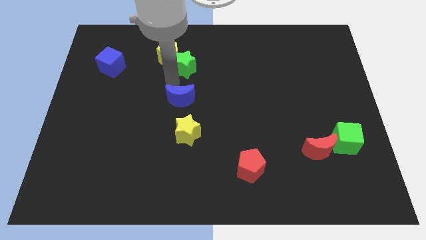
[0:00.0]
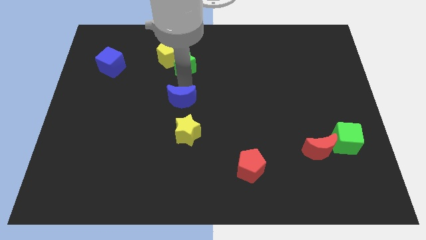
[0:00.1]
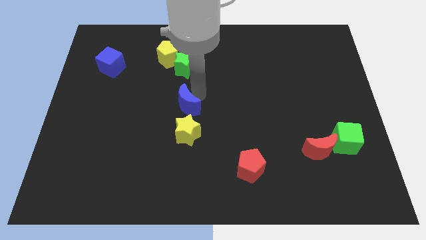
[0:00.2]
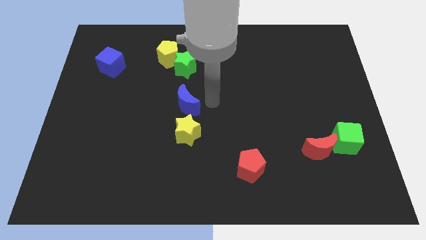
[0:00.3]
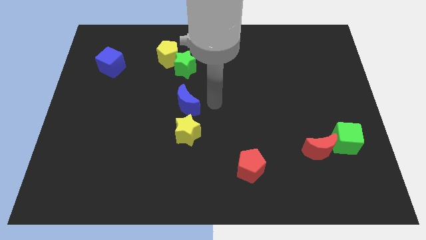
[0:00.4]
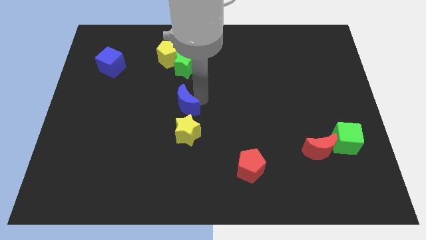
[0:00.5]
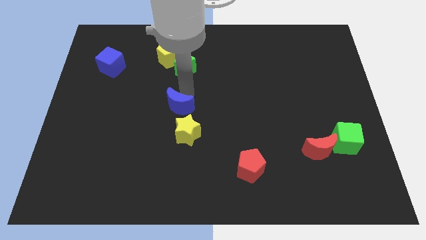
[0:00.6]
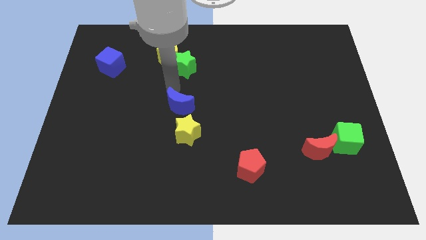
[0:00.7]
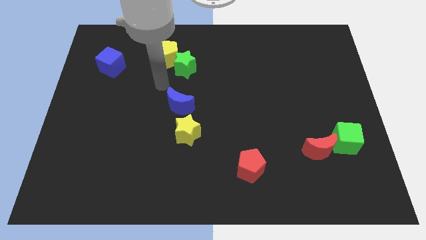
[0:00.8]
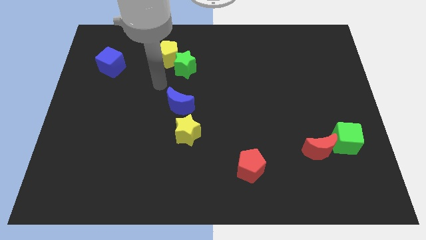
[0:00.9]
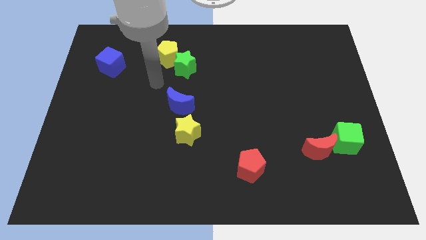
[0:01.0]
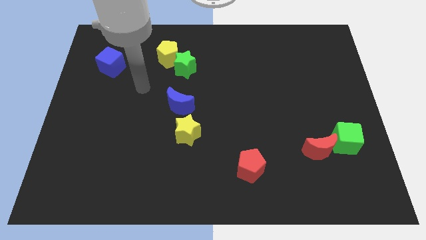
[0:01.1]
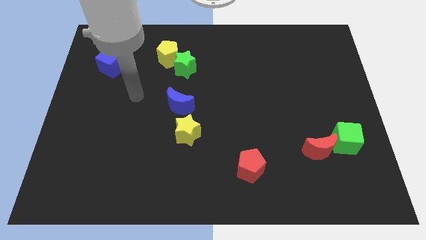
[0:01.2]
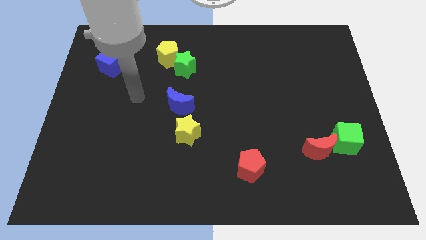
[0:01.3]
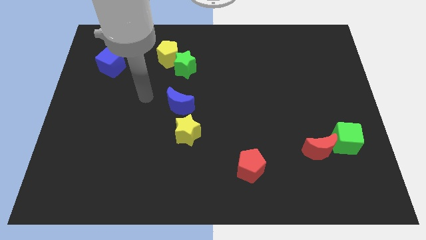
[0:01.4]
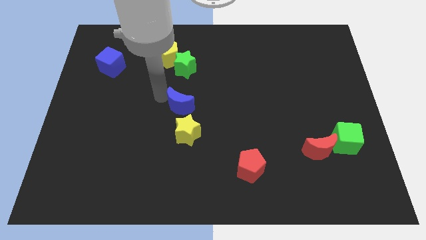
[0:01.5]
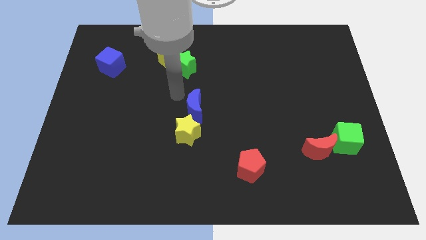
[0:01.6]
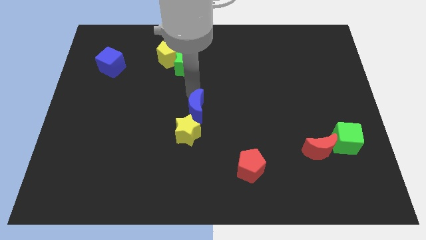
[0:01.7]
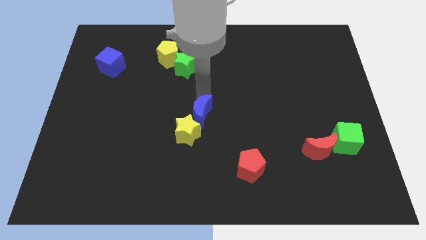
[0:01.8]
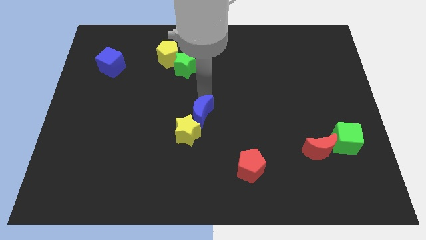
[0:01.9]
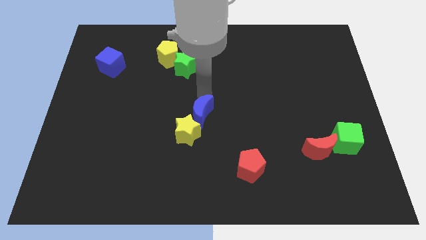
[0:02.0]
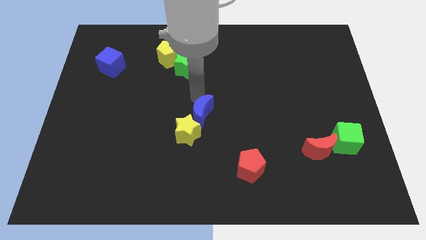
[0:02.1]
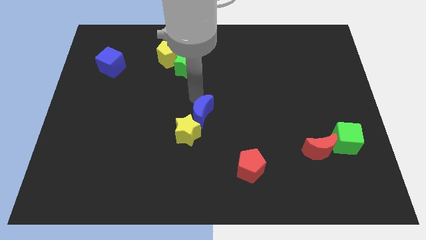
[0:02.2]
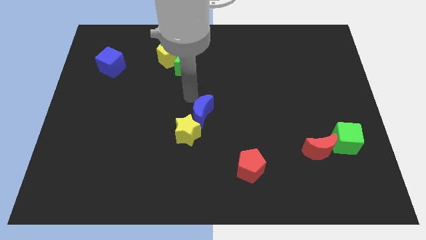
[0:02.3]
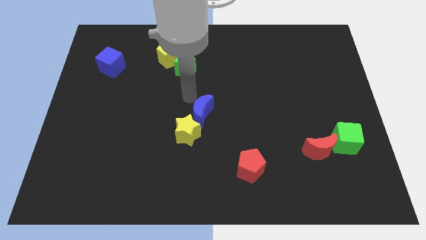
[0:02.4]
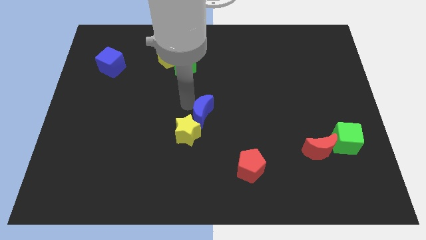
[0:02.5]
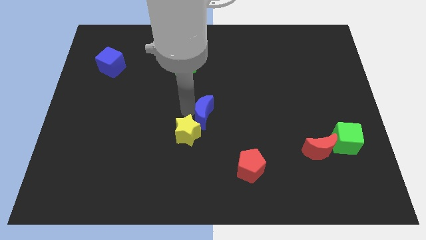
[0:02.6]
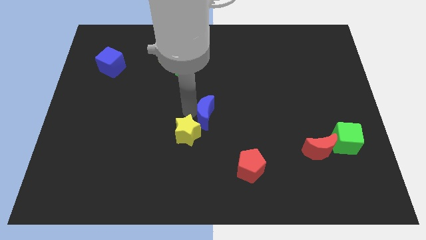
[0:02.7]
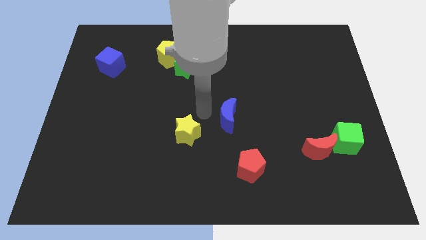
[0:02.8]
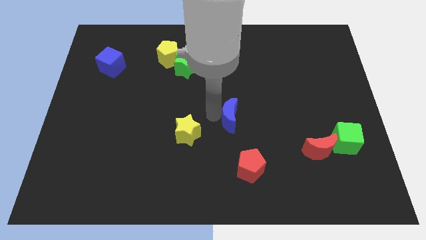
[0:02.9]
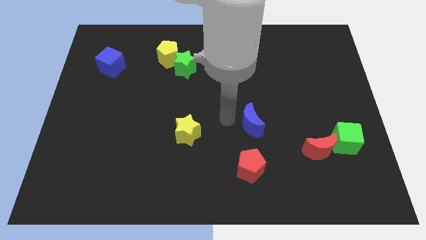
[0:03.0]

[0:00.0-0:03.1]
place the blue crescent parallel above the red pentagon

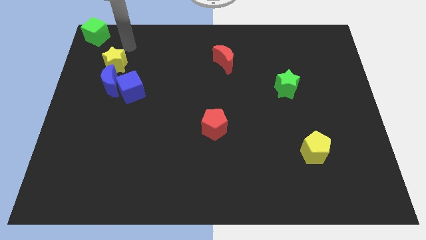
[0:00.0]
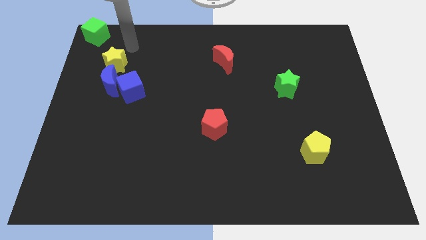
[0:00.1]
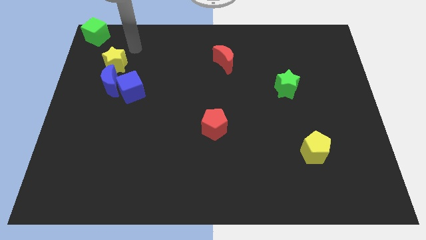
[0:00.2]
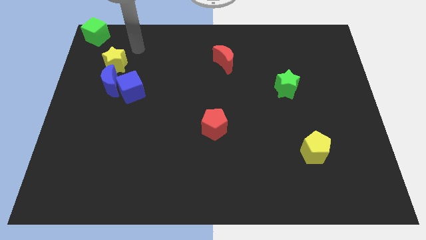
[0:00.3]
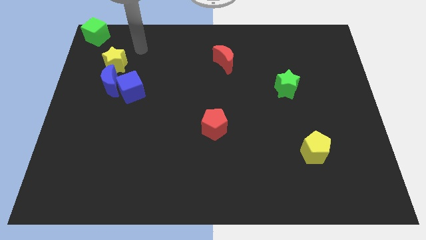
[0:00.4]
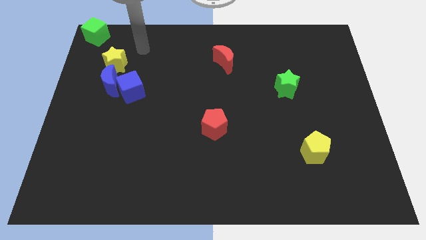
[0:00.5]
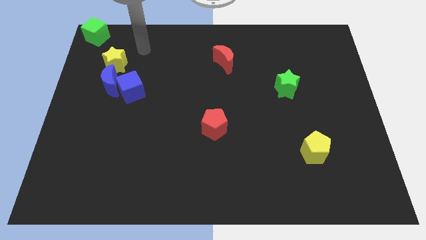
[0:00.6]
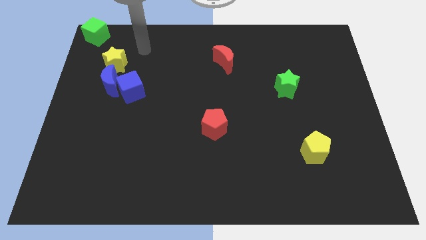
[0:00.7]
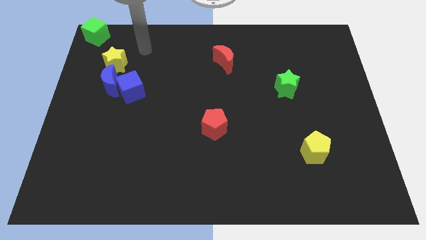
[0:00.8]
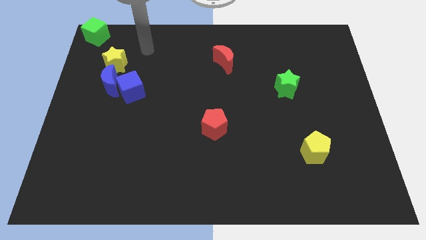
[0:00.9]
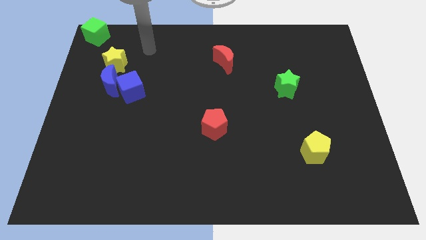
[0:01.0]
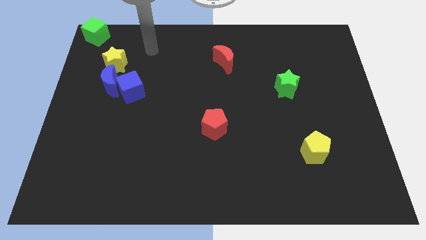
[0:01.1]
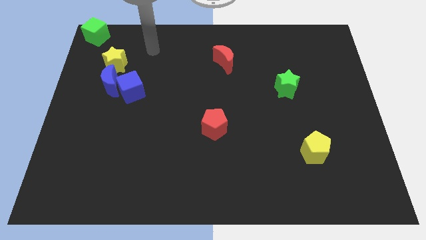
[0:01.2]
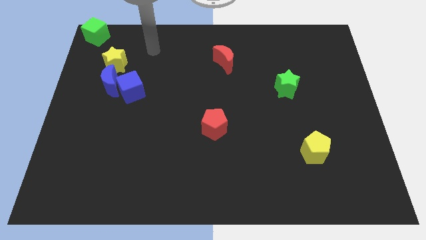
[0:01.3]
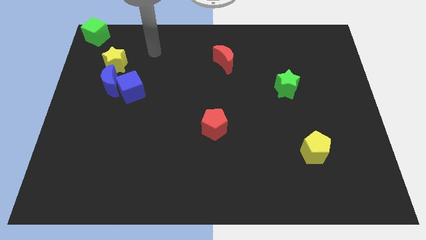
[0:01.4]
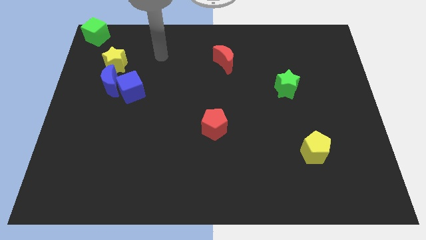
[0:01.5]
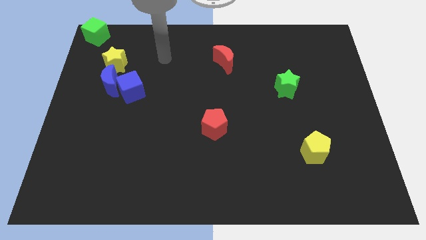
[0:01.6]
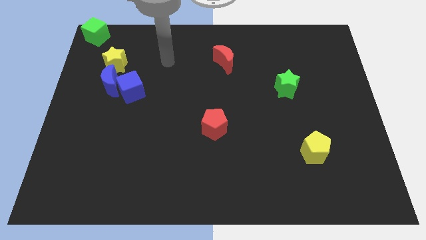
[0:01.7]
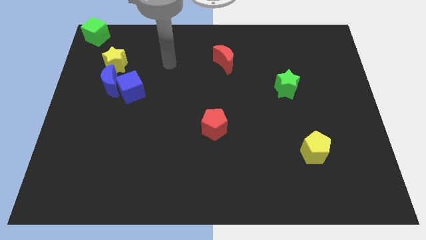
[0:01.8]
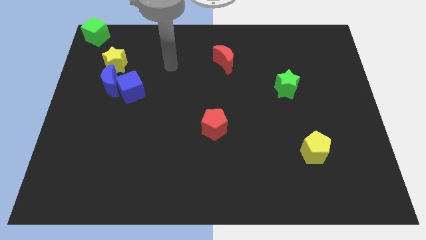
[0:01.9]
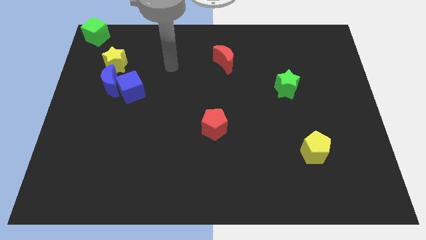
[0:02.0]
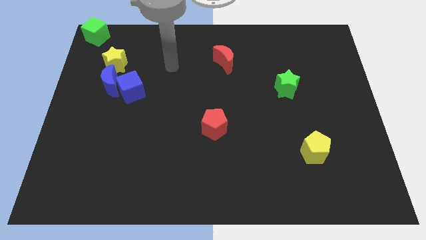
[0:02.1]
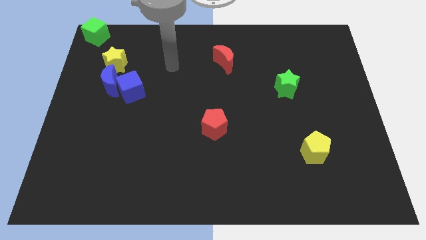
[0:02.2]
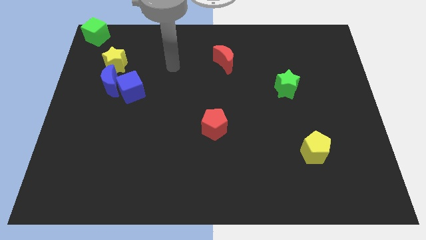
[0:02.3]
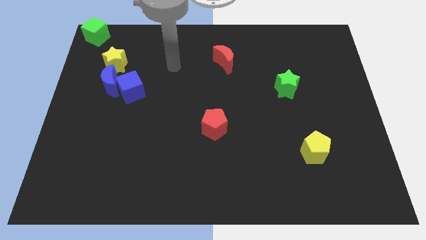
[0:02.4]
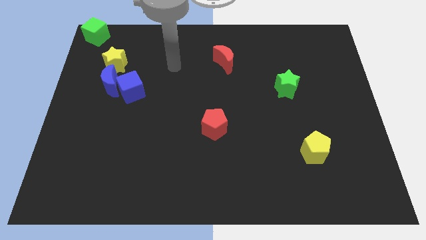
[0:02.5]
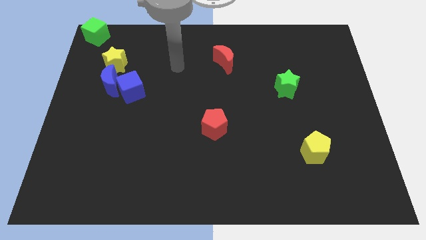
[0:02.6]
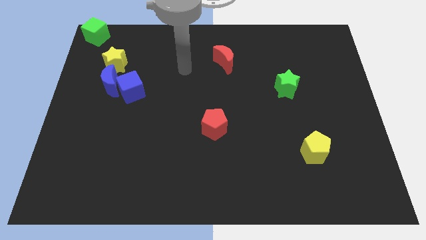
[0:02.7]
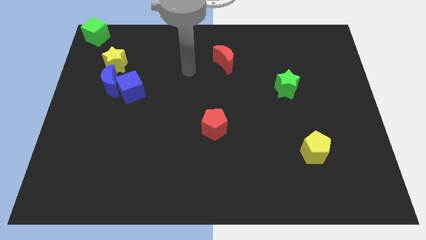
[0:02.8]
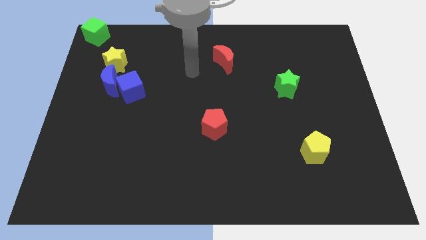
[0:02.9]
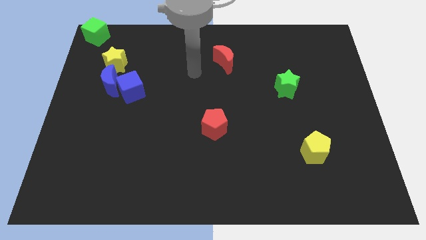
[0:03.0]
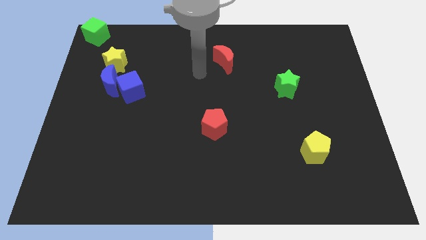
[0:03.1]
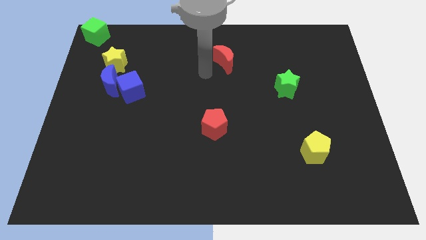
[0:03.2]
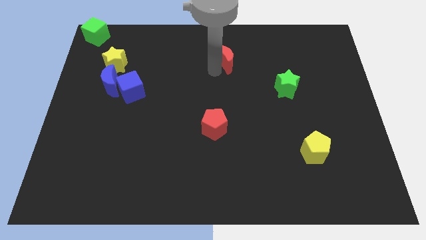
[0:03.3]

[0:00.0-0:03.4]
move your arm towards the red moon

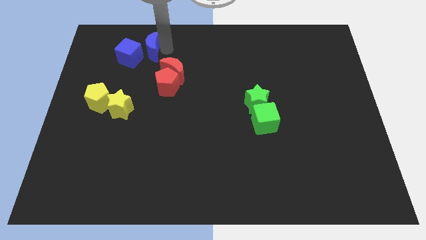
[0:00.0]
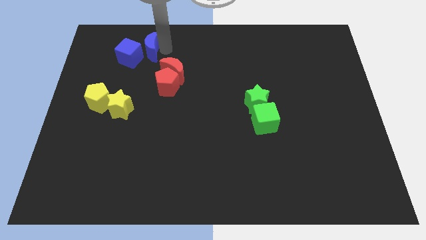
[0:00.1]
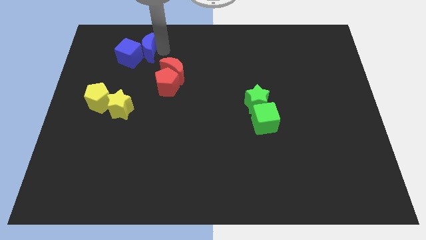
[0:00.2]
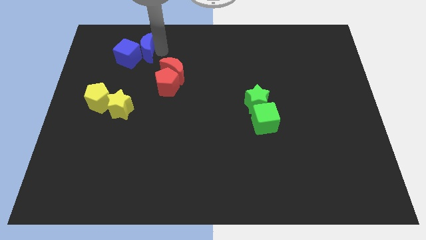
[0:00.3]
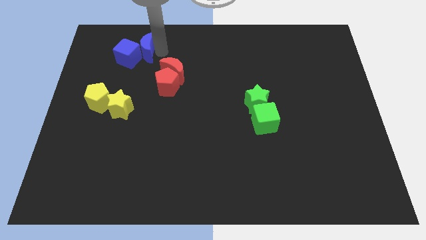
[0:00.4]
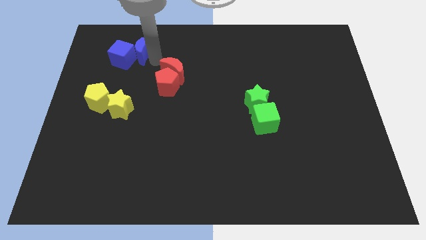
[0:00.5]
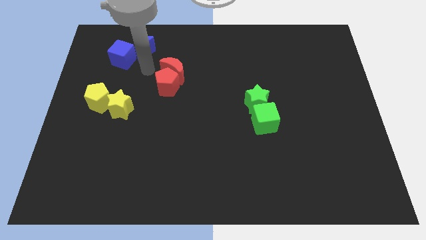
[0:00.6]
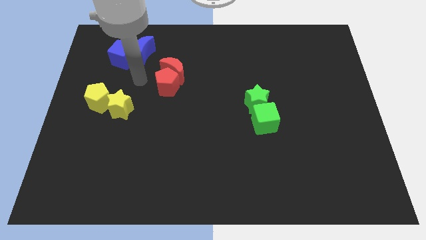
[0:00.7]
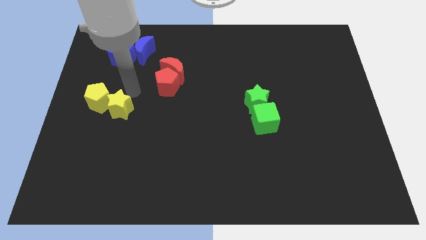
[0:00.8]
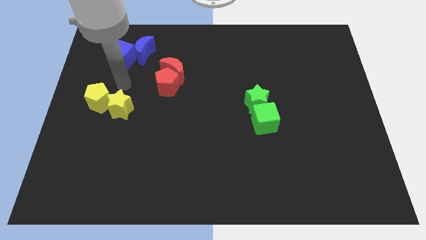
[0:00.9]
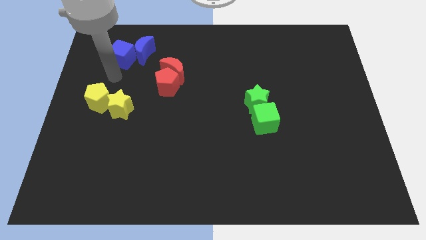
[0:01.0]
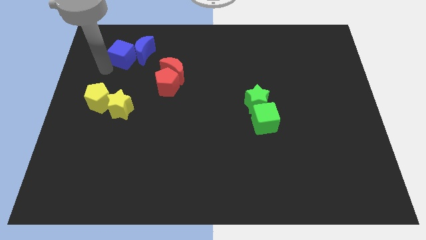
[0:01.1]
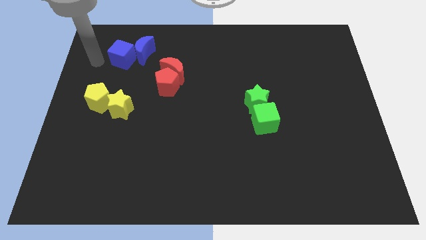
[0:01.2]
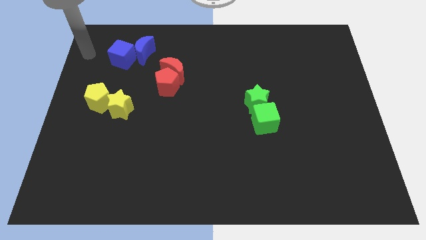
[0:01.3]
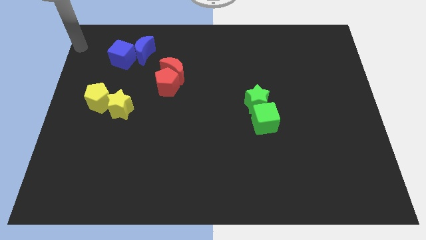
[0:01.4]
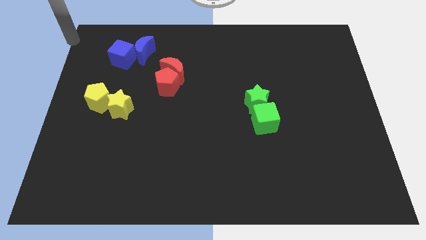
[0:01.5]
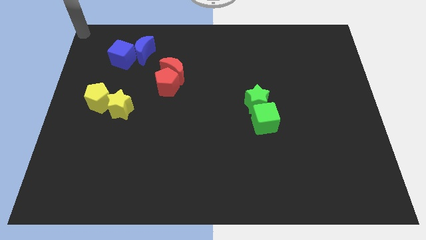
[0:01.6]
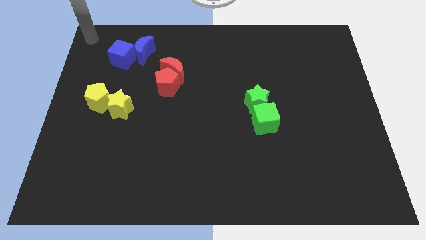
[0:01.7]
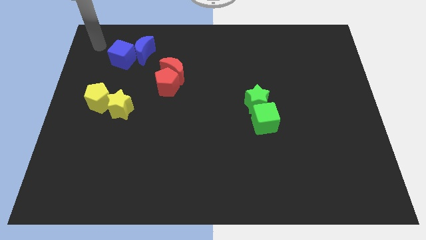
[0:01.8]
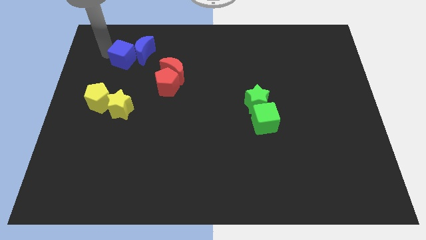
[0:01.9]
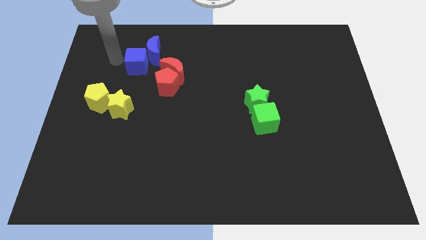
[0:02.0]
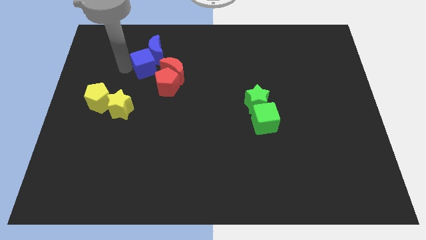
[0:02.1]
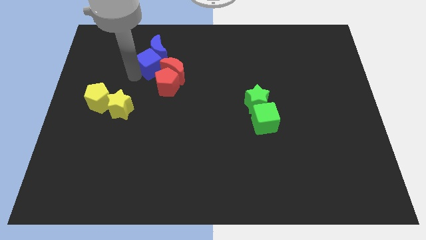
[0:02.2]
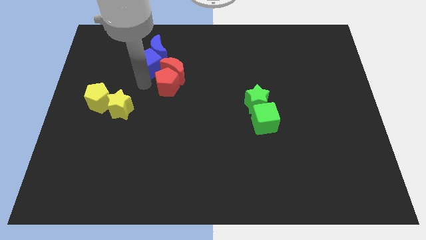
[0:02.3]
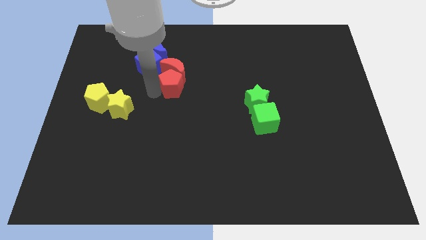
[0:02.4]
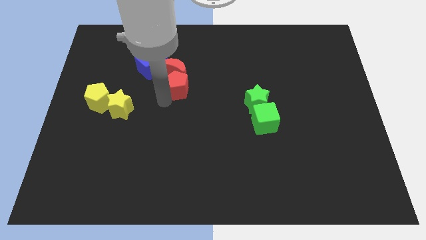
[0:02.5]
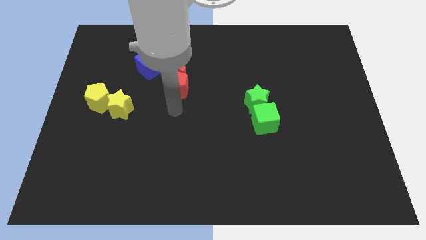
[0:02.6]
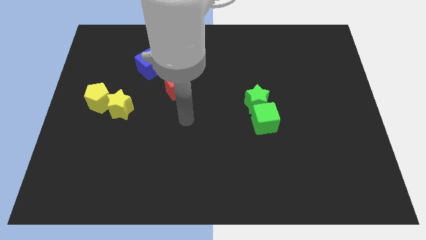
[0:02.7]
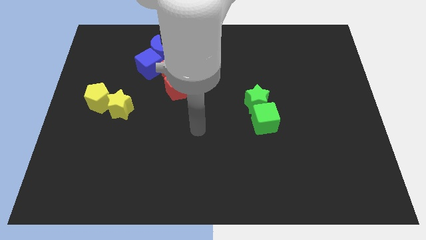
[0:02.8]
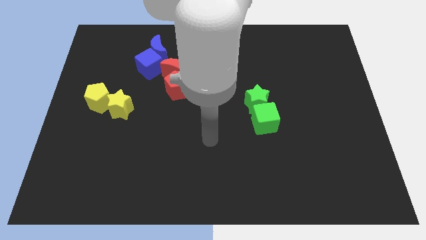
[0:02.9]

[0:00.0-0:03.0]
move the blue par of blocks into the red pair of blocks
